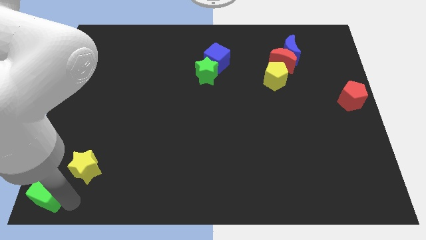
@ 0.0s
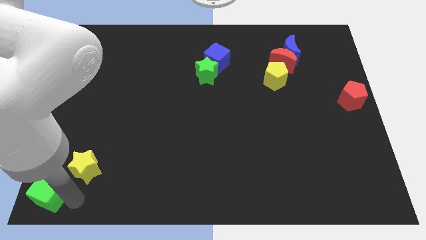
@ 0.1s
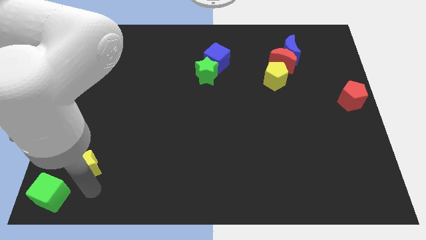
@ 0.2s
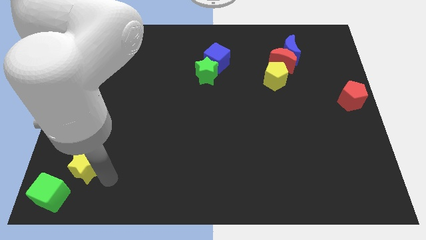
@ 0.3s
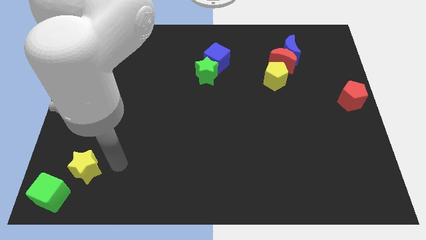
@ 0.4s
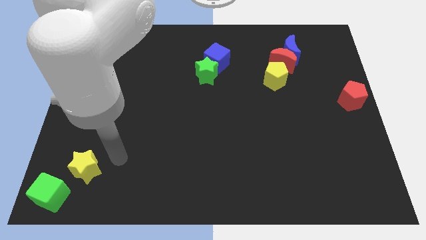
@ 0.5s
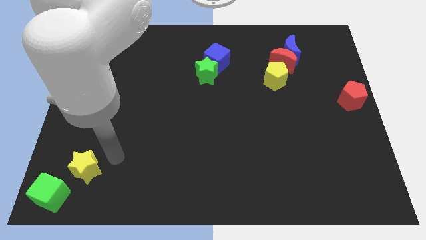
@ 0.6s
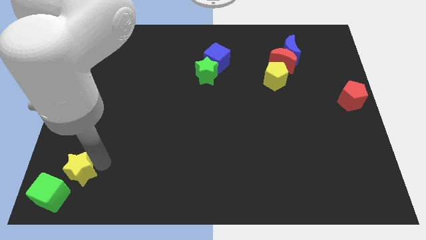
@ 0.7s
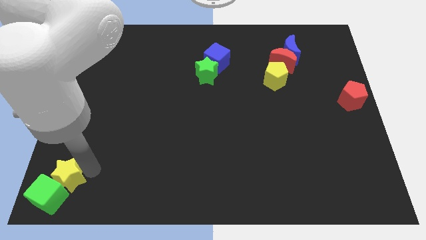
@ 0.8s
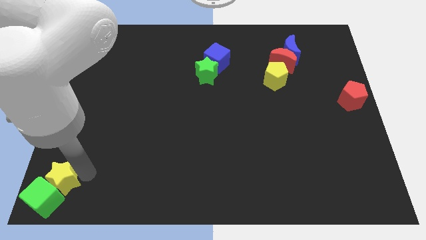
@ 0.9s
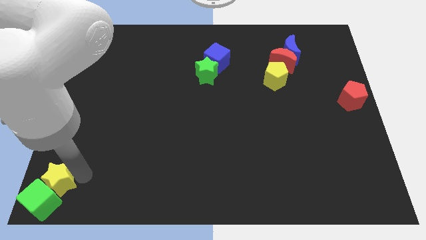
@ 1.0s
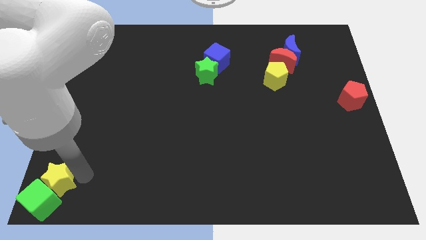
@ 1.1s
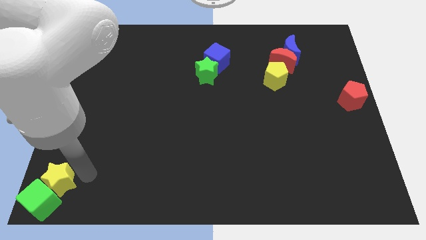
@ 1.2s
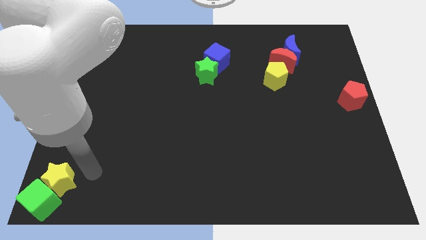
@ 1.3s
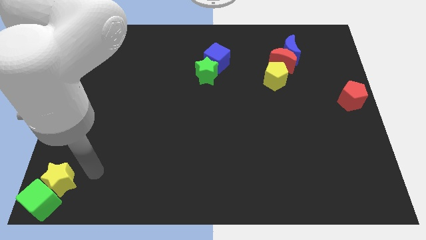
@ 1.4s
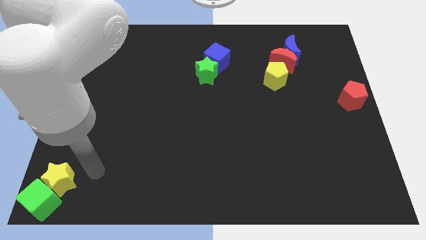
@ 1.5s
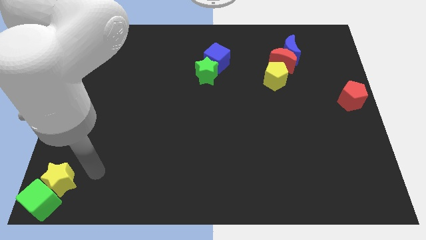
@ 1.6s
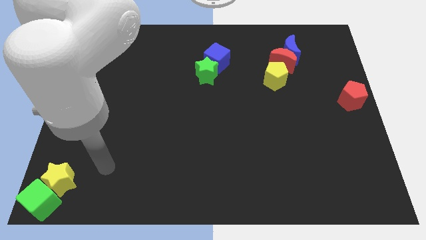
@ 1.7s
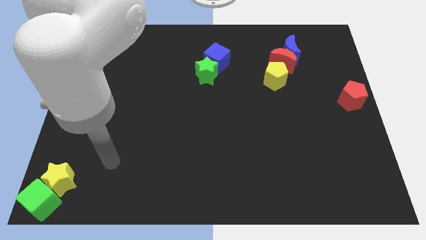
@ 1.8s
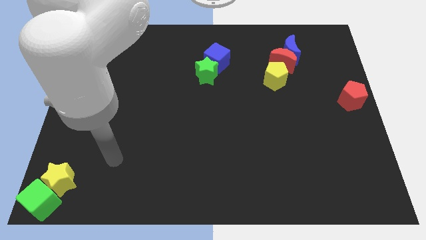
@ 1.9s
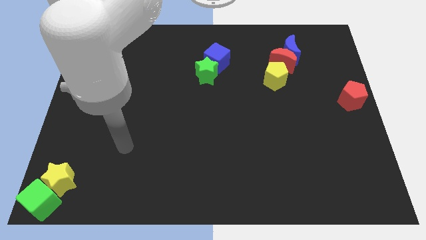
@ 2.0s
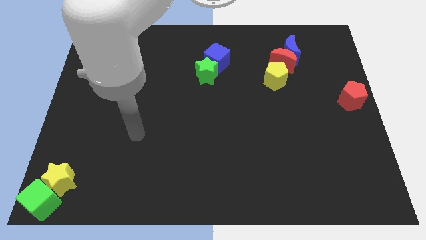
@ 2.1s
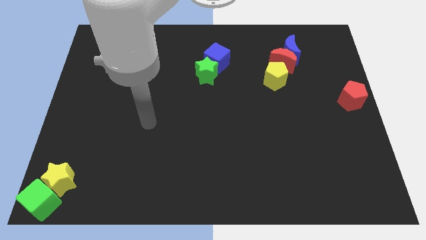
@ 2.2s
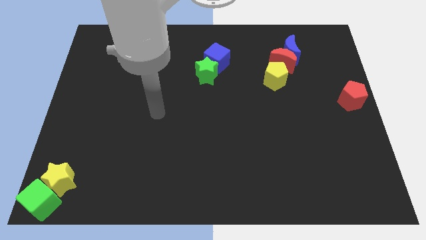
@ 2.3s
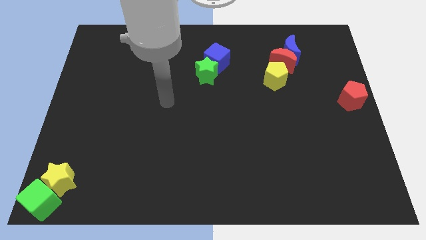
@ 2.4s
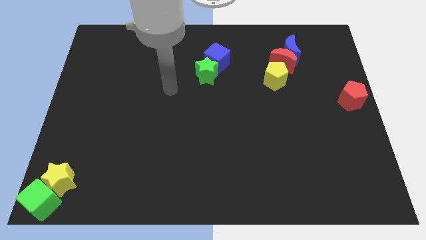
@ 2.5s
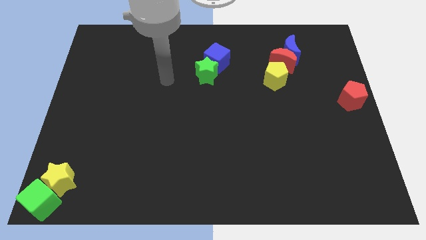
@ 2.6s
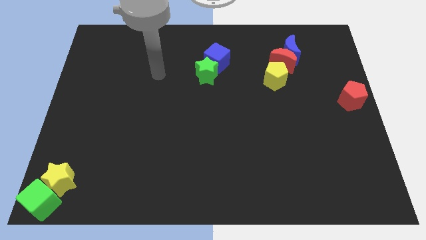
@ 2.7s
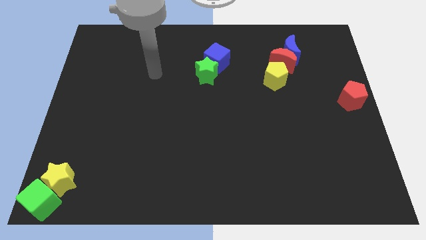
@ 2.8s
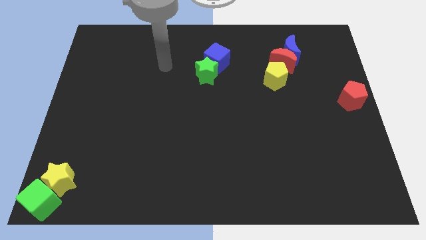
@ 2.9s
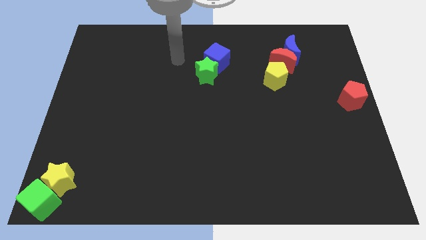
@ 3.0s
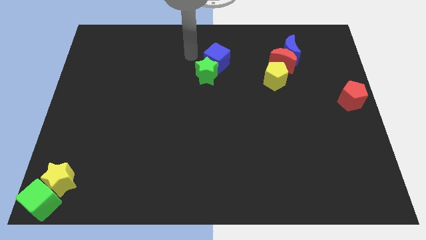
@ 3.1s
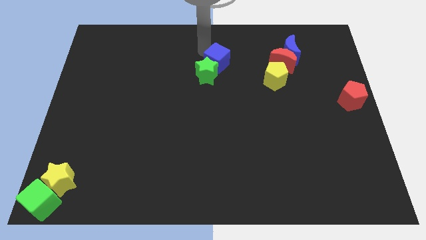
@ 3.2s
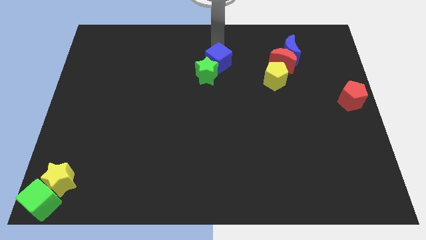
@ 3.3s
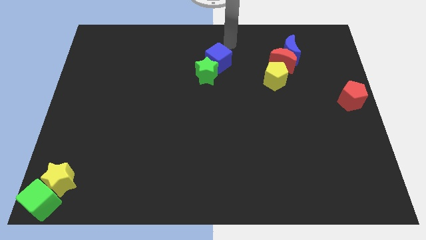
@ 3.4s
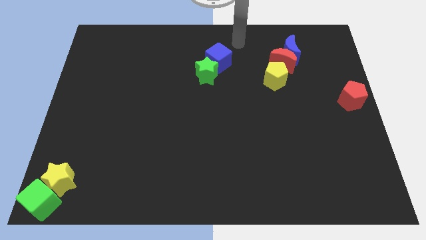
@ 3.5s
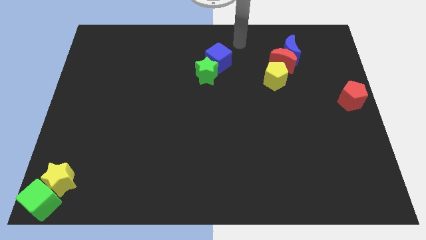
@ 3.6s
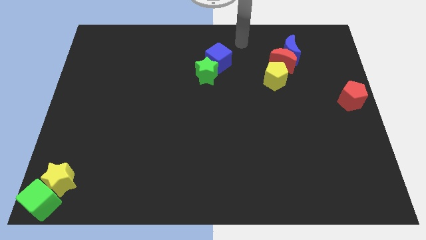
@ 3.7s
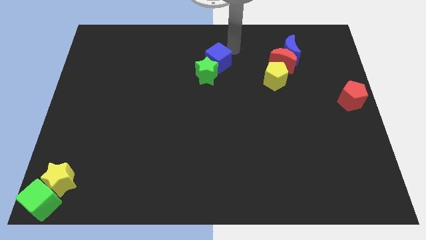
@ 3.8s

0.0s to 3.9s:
place the arm diagonal to the blue cube

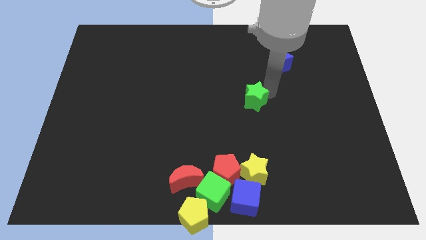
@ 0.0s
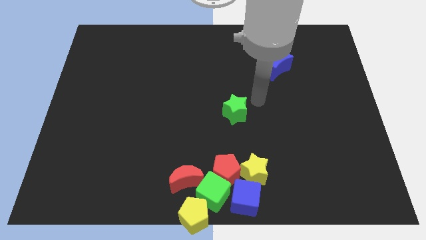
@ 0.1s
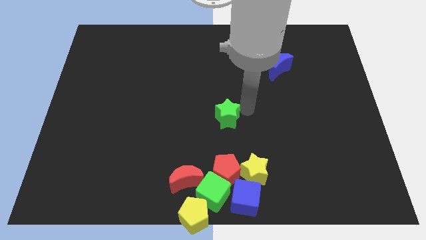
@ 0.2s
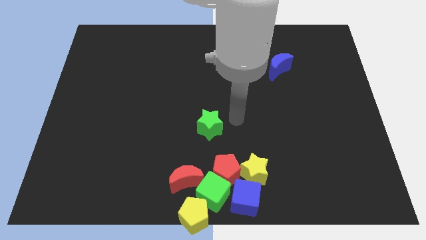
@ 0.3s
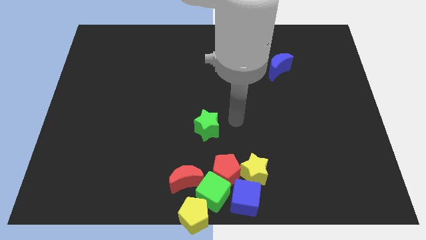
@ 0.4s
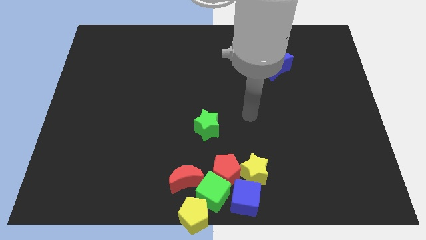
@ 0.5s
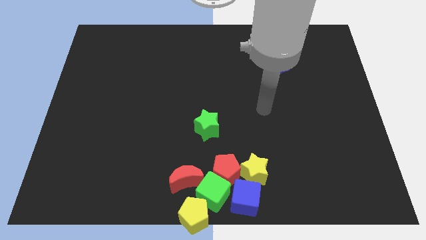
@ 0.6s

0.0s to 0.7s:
move green star diagonally down

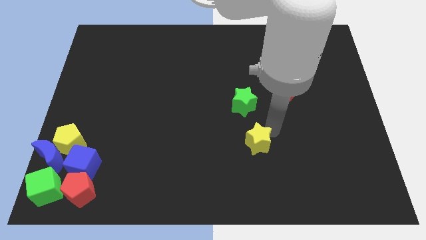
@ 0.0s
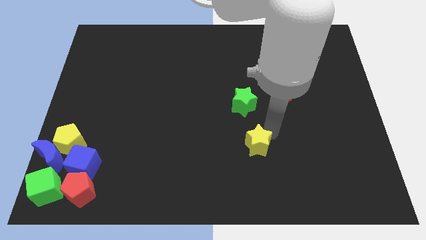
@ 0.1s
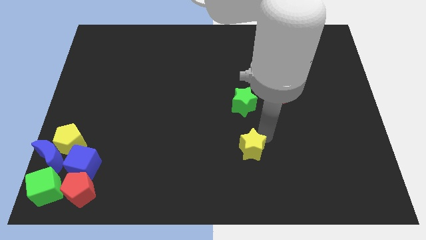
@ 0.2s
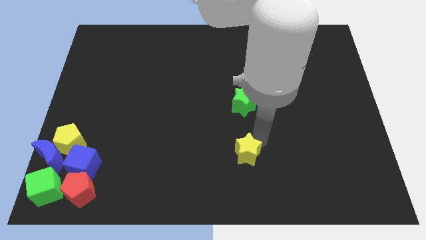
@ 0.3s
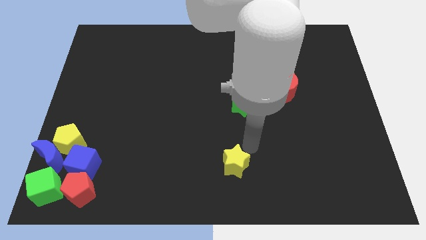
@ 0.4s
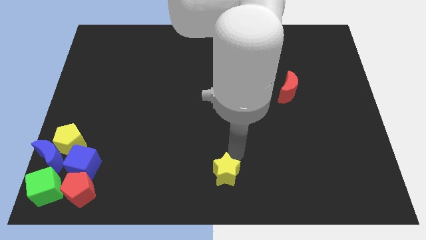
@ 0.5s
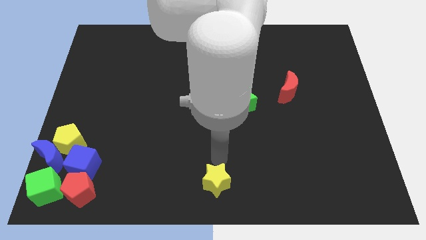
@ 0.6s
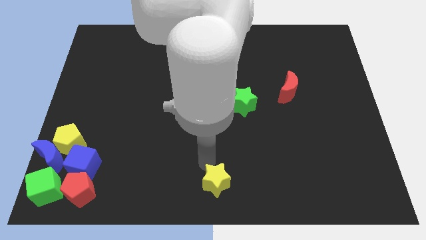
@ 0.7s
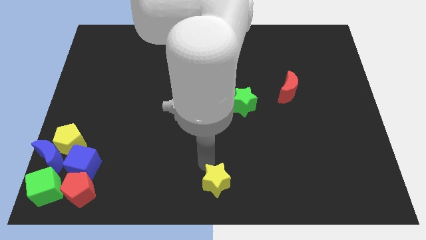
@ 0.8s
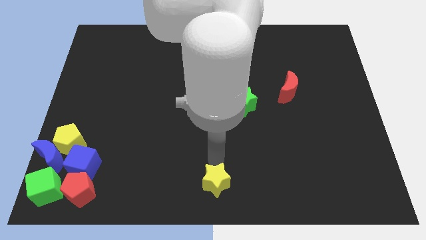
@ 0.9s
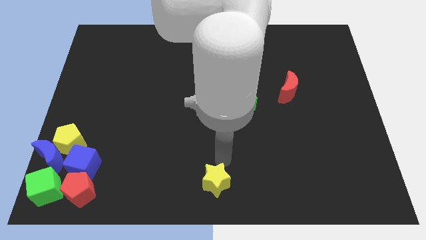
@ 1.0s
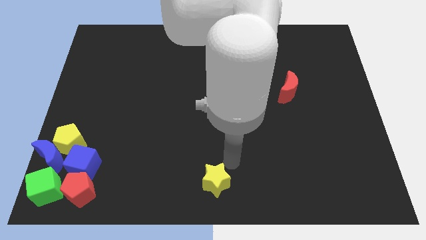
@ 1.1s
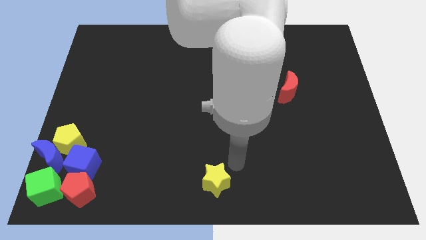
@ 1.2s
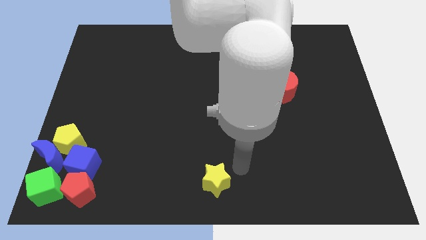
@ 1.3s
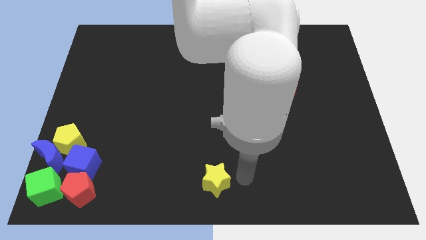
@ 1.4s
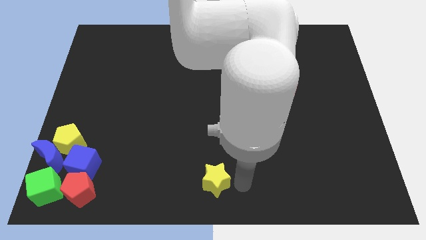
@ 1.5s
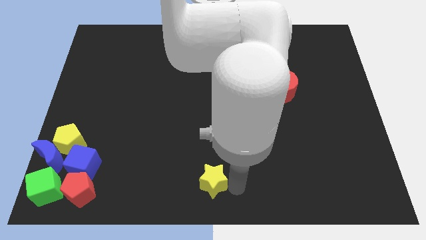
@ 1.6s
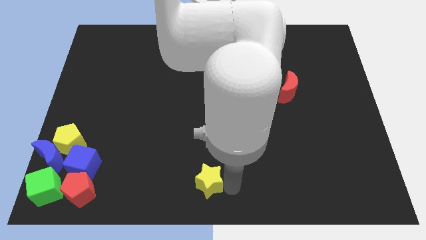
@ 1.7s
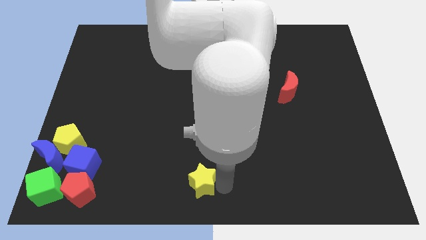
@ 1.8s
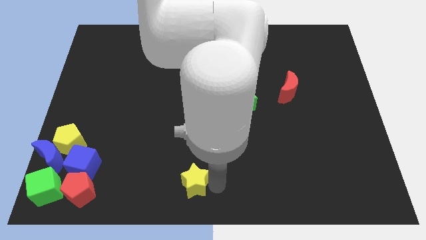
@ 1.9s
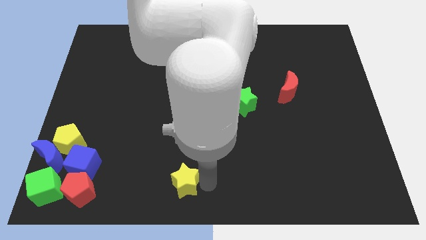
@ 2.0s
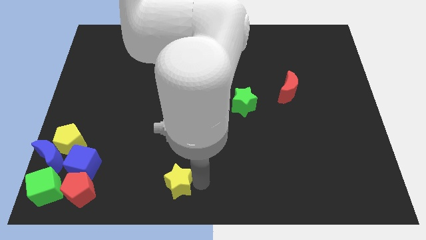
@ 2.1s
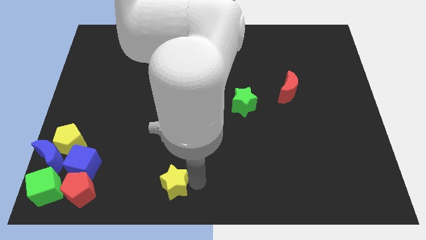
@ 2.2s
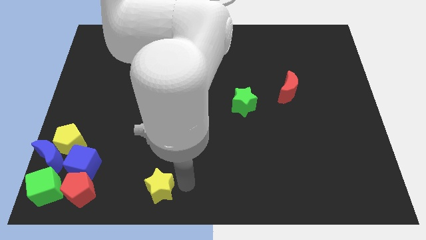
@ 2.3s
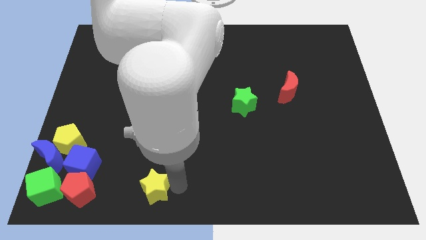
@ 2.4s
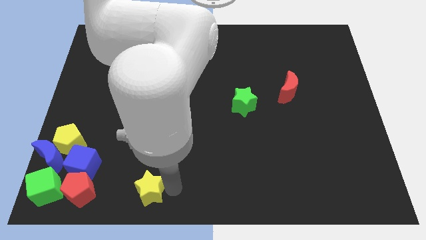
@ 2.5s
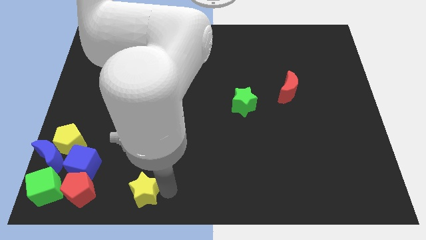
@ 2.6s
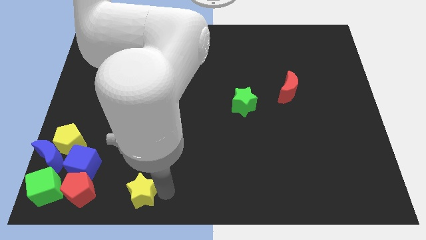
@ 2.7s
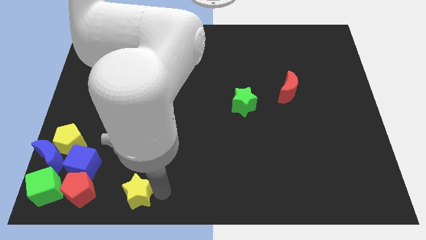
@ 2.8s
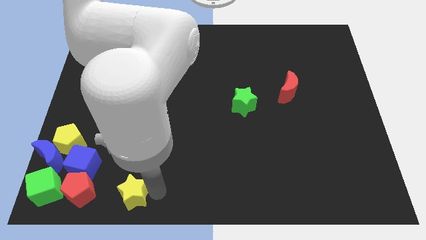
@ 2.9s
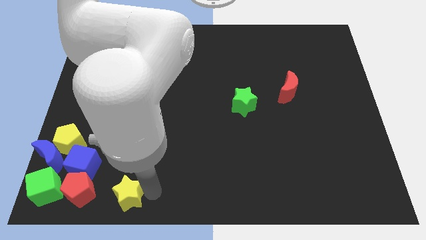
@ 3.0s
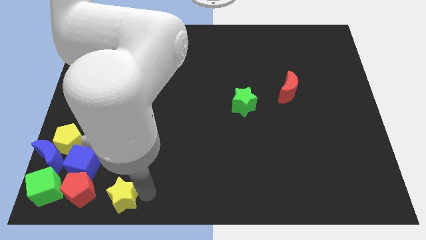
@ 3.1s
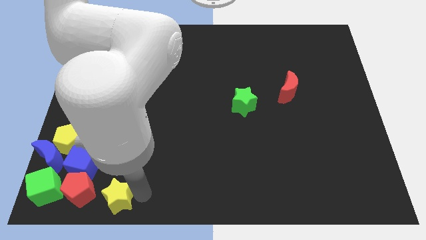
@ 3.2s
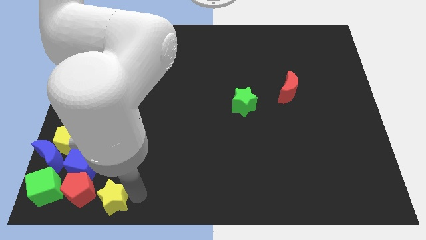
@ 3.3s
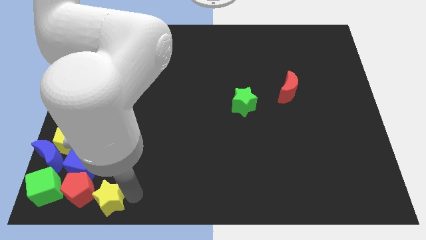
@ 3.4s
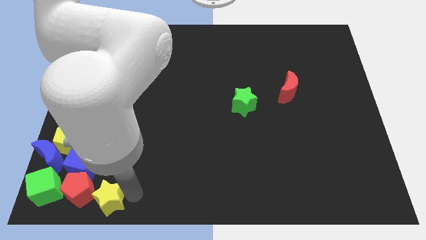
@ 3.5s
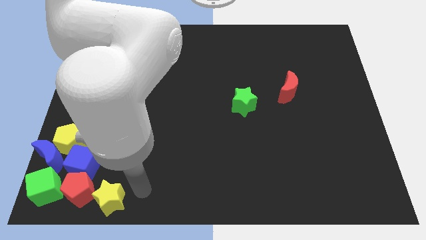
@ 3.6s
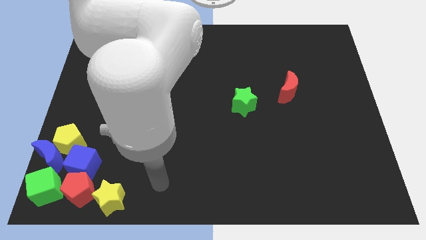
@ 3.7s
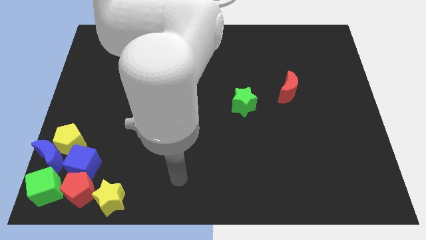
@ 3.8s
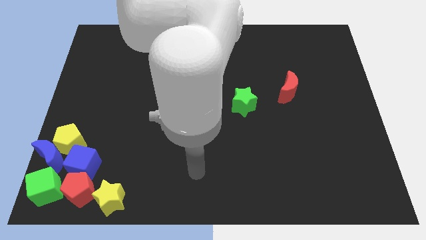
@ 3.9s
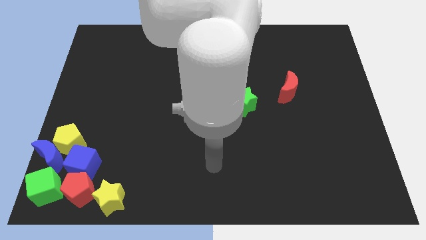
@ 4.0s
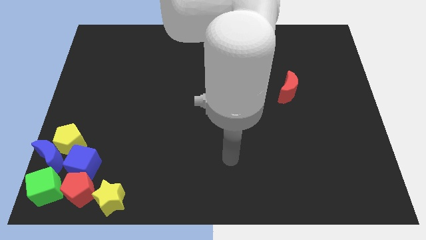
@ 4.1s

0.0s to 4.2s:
move the yellow star to the right of the red pentagon
